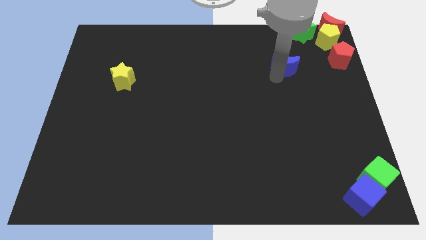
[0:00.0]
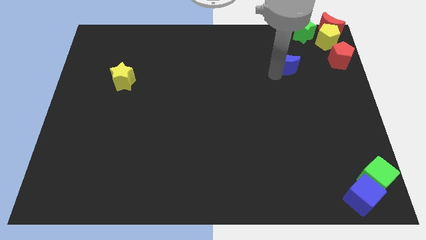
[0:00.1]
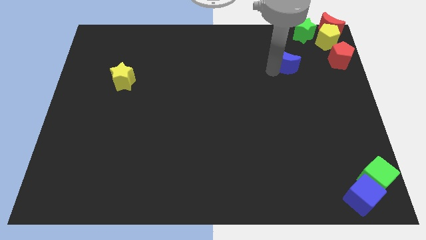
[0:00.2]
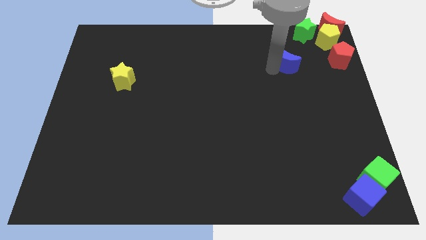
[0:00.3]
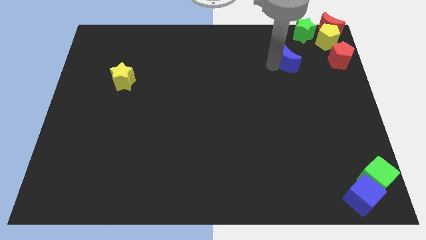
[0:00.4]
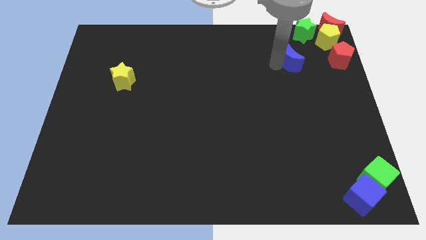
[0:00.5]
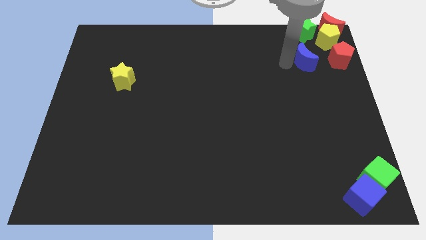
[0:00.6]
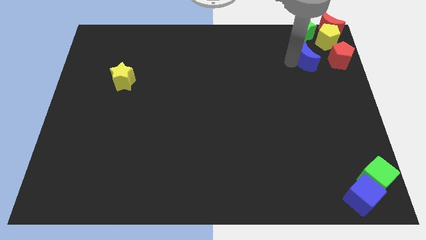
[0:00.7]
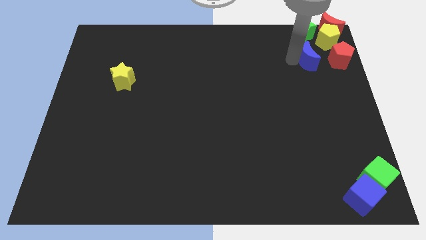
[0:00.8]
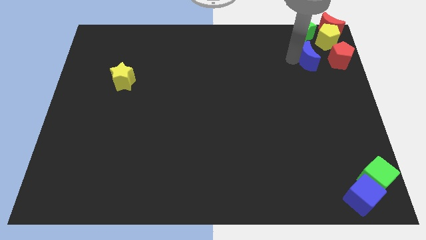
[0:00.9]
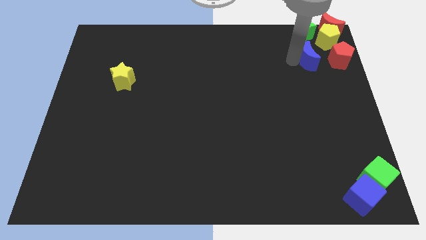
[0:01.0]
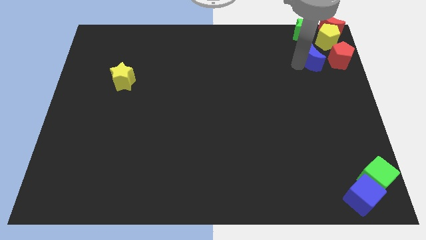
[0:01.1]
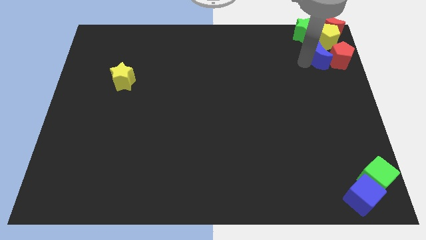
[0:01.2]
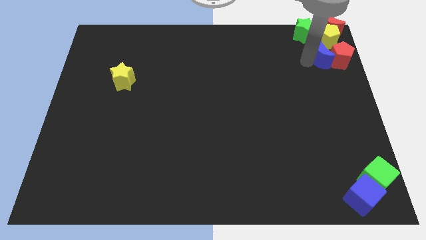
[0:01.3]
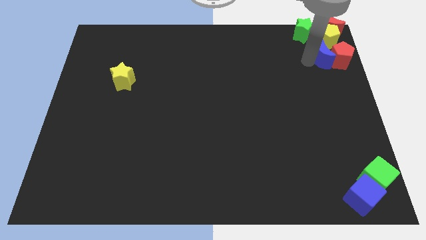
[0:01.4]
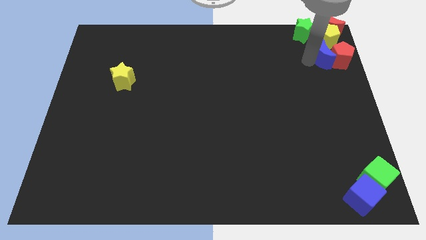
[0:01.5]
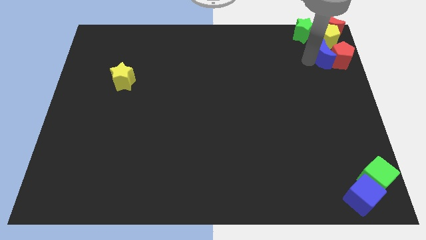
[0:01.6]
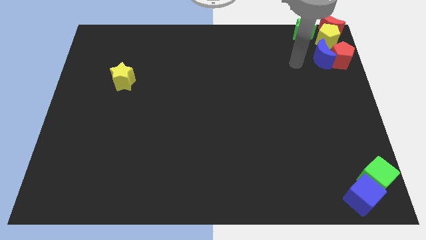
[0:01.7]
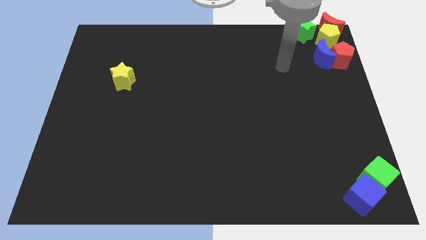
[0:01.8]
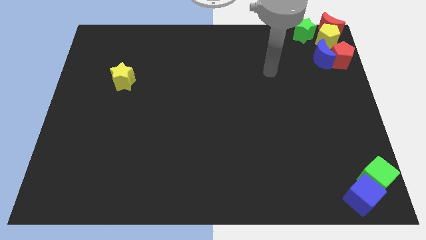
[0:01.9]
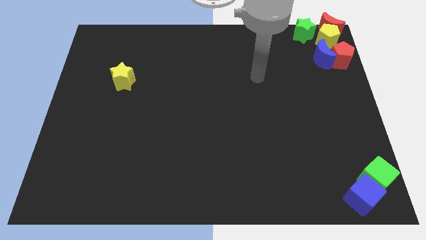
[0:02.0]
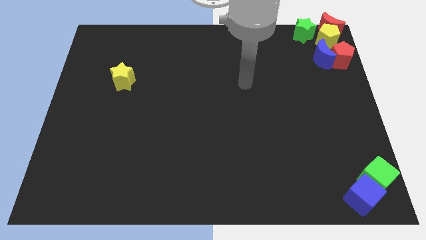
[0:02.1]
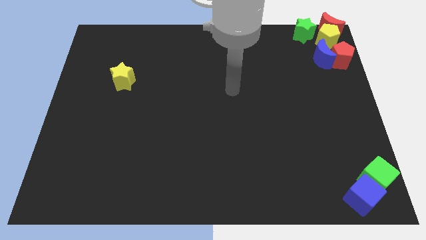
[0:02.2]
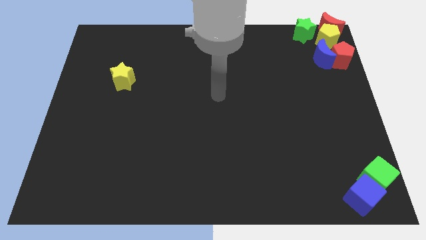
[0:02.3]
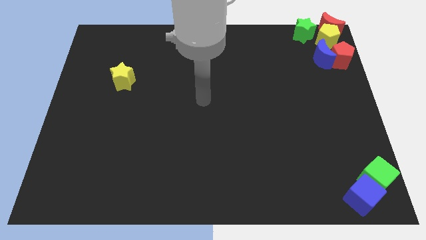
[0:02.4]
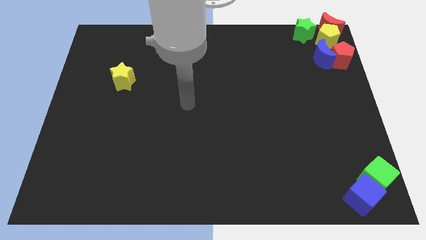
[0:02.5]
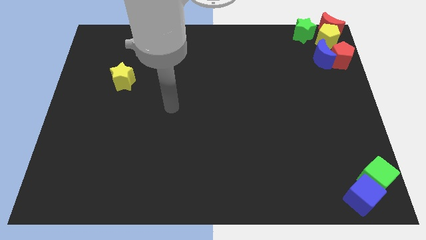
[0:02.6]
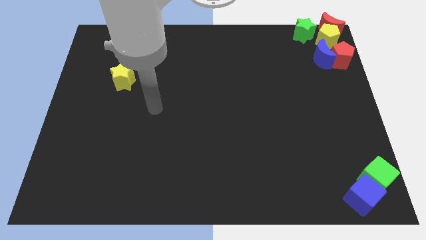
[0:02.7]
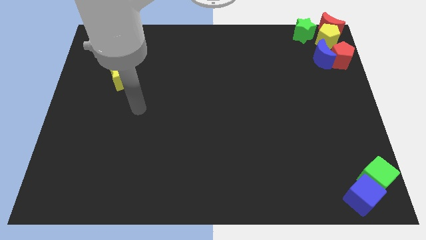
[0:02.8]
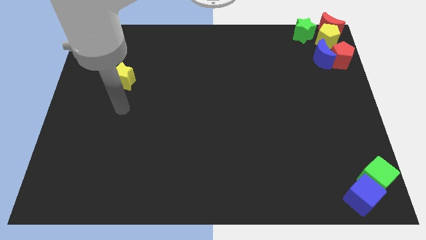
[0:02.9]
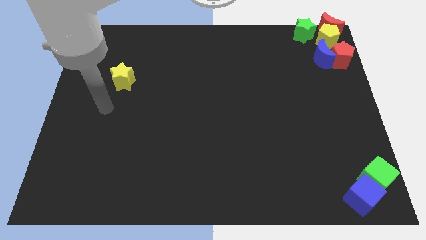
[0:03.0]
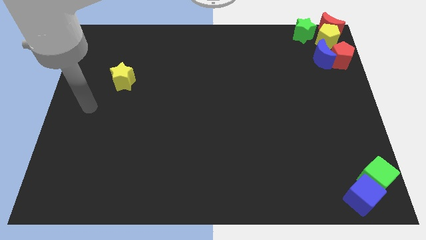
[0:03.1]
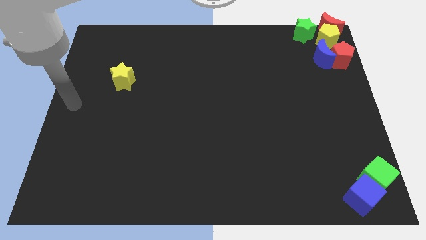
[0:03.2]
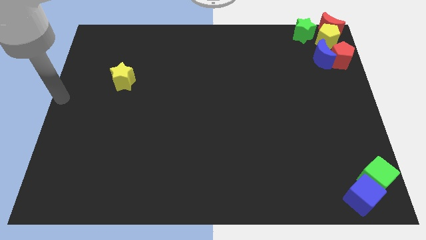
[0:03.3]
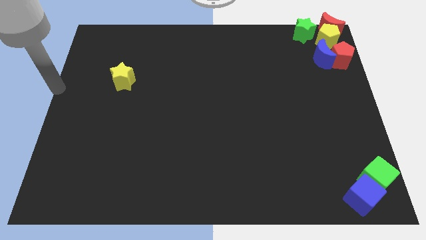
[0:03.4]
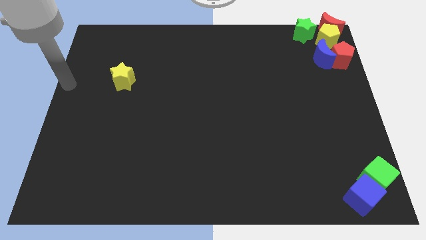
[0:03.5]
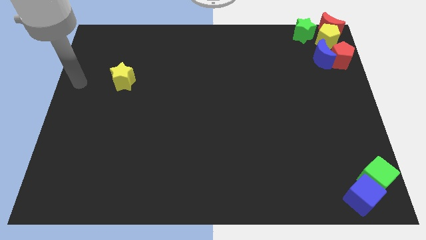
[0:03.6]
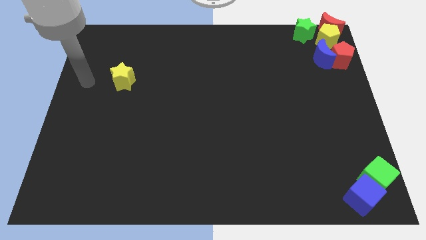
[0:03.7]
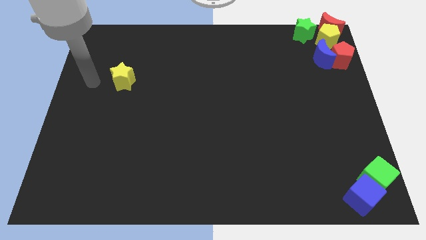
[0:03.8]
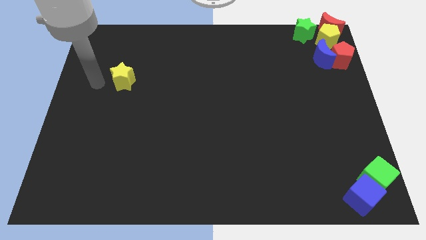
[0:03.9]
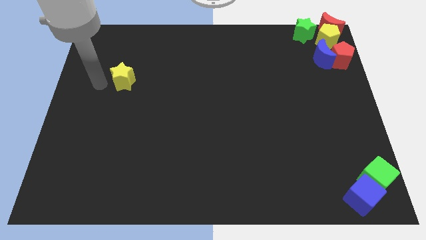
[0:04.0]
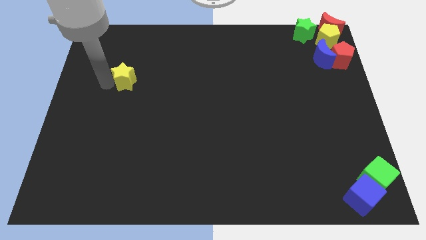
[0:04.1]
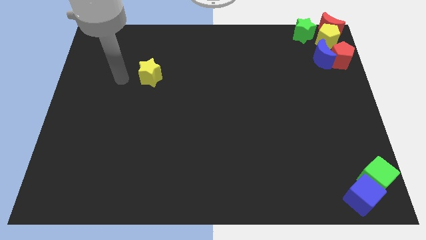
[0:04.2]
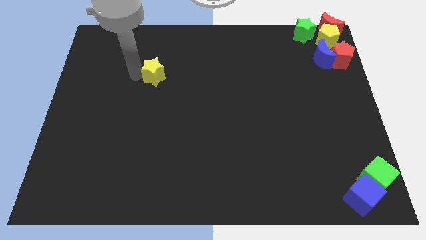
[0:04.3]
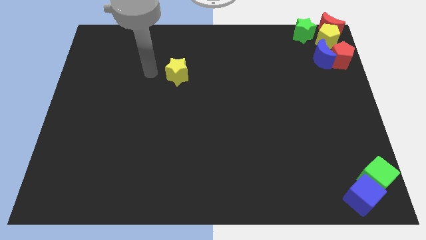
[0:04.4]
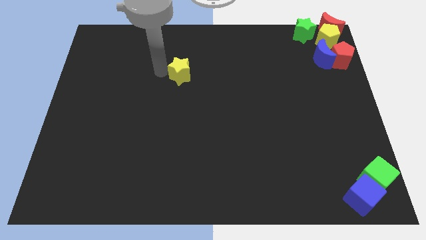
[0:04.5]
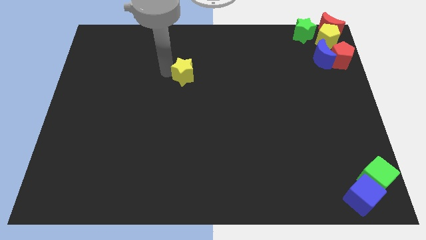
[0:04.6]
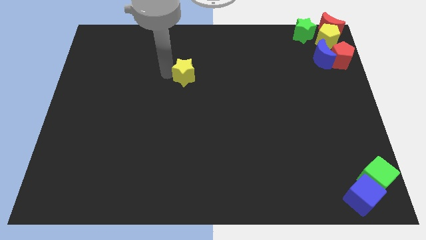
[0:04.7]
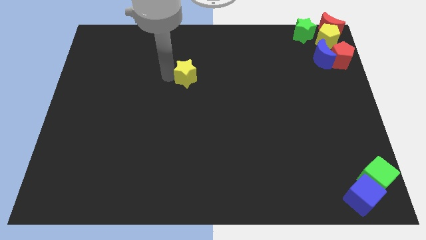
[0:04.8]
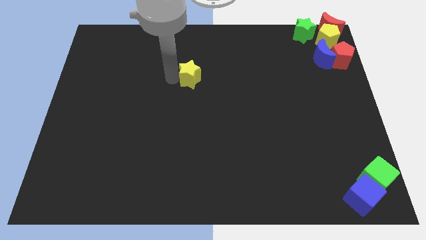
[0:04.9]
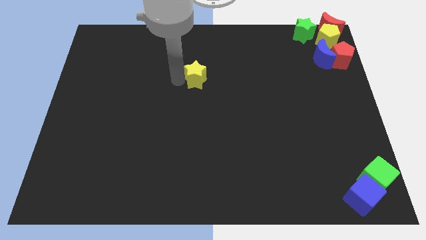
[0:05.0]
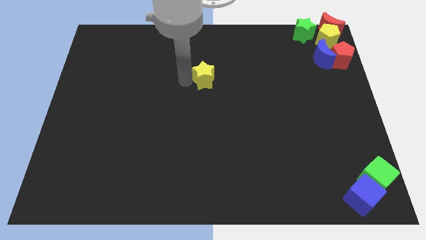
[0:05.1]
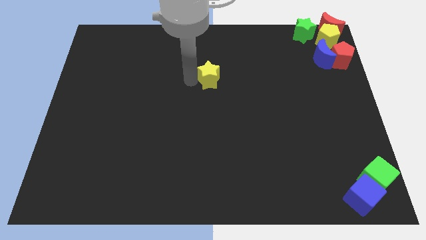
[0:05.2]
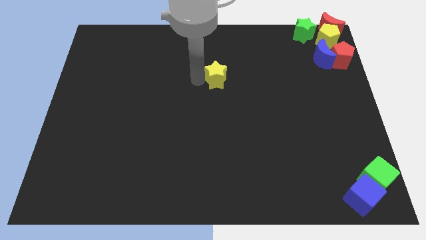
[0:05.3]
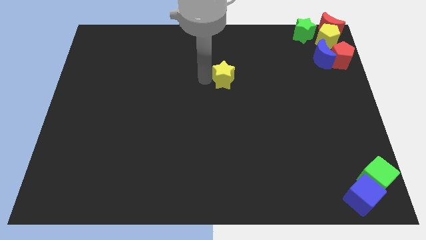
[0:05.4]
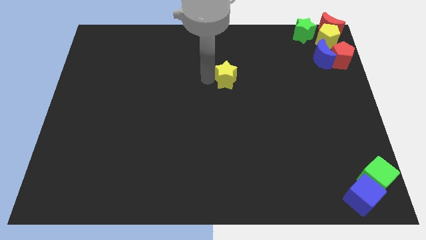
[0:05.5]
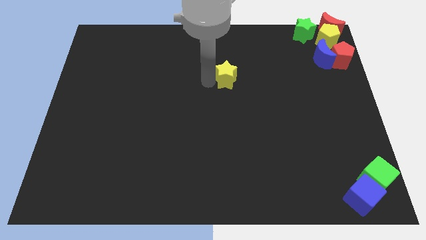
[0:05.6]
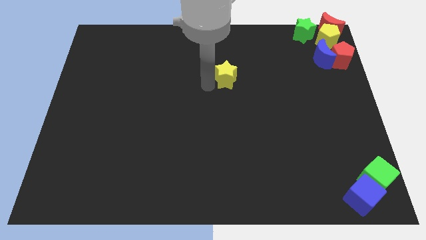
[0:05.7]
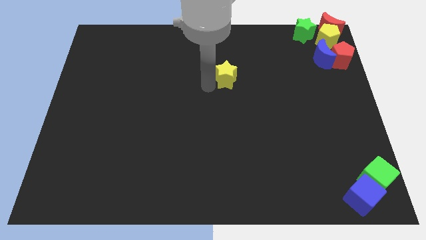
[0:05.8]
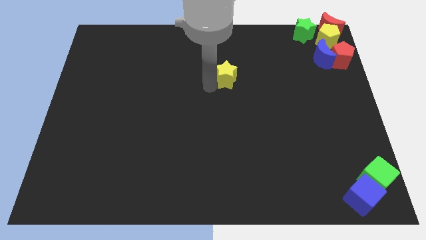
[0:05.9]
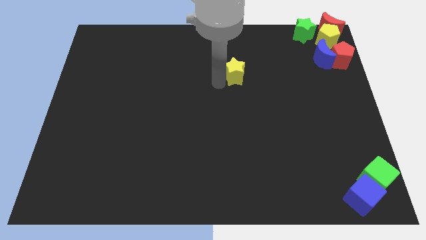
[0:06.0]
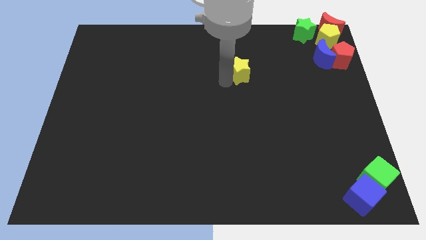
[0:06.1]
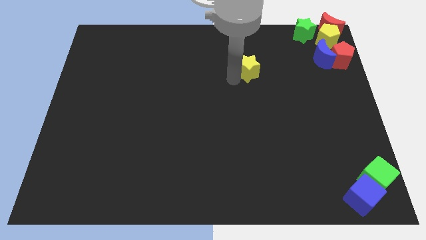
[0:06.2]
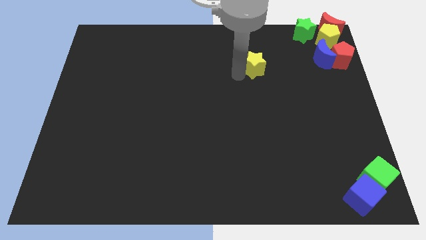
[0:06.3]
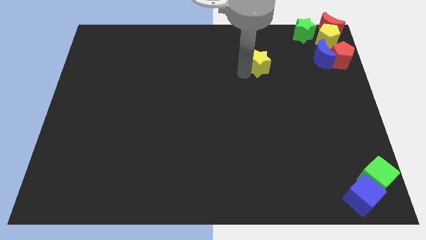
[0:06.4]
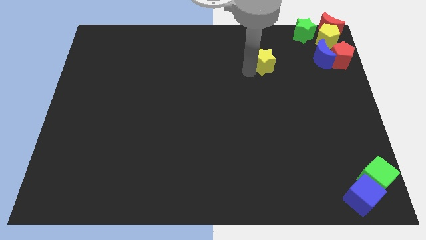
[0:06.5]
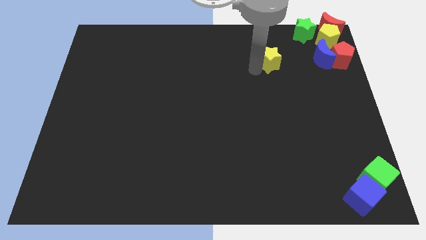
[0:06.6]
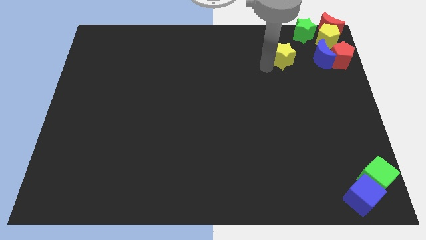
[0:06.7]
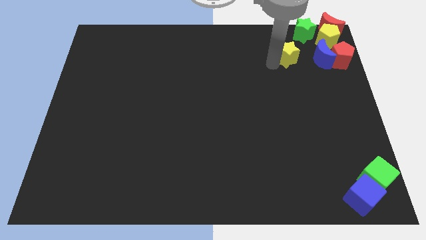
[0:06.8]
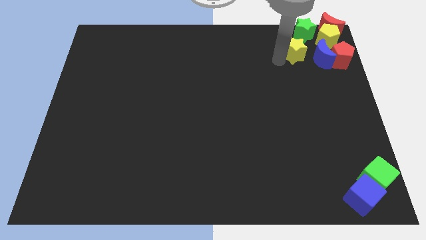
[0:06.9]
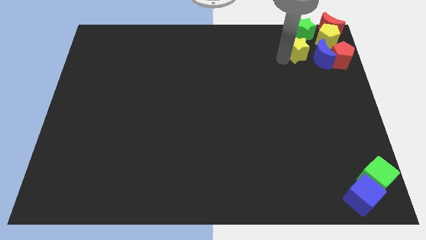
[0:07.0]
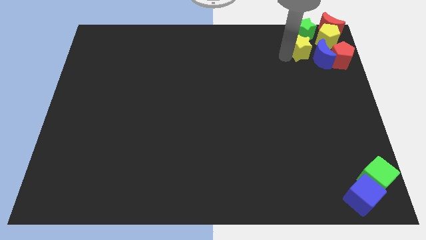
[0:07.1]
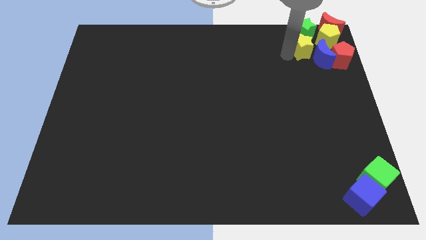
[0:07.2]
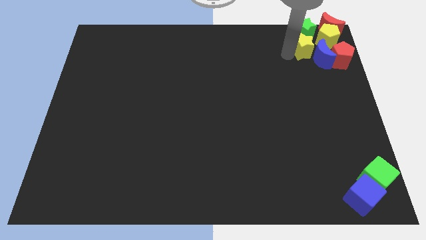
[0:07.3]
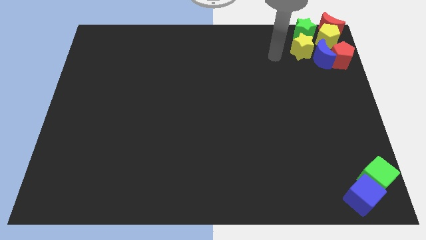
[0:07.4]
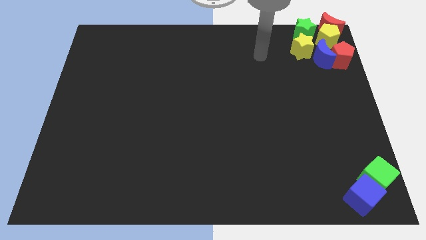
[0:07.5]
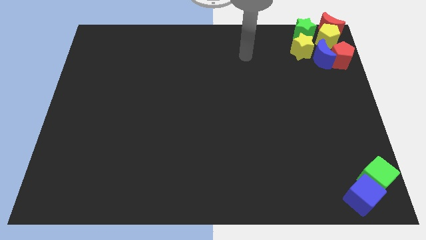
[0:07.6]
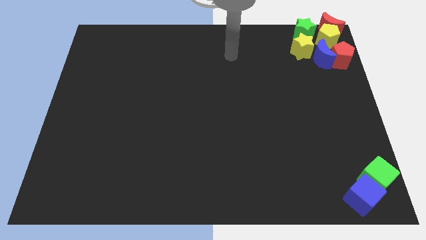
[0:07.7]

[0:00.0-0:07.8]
move the yellow star close to the green star

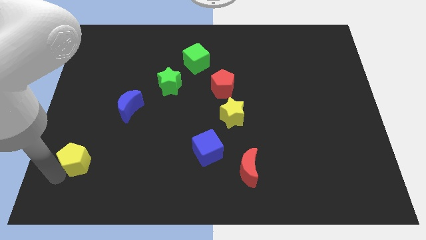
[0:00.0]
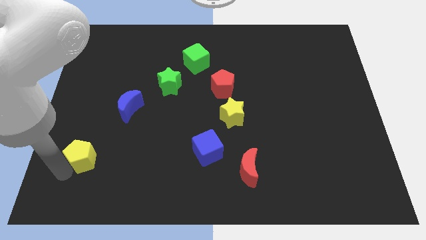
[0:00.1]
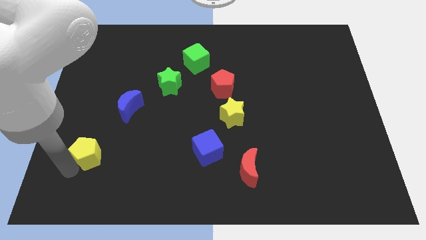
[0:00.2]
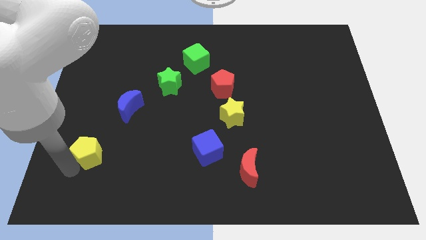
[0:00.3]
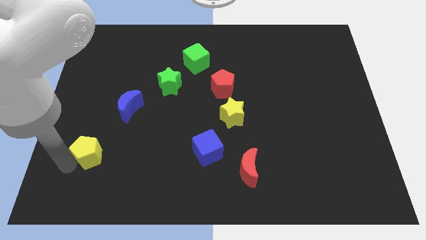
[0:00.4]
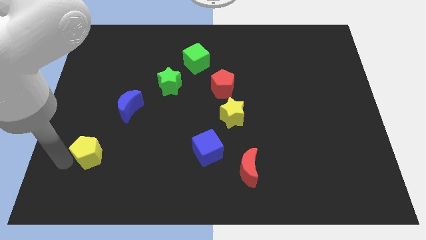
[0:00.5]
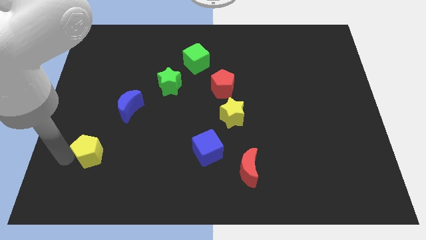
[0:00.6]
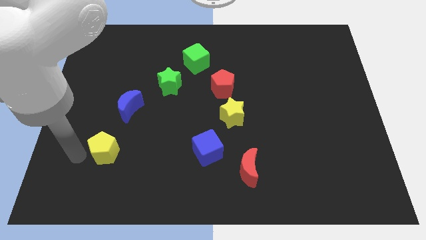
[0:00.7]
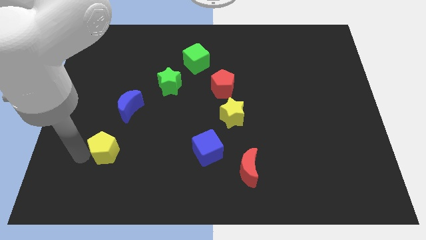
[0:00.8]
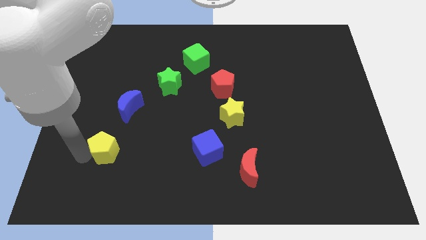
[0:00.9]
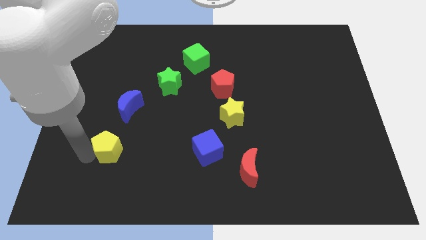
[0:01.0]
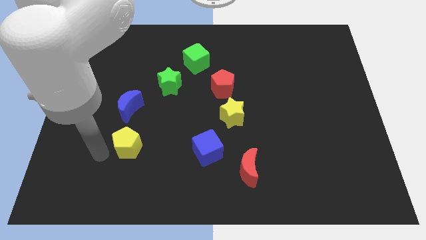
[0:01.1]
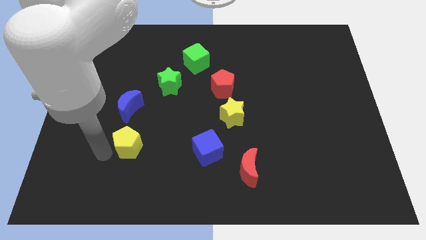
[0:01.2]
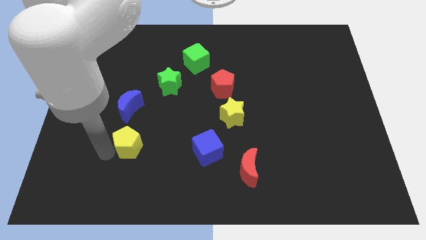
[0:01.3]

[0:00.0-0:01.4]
push yellow pentagon under the blue moon
